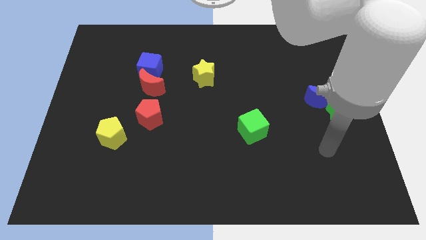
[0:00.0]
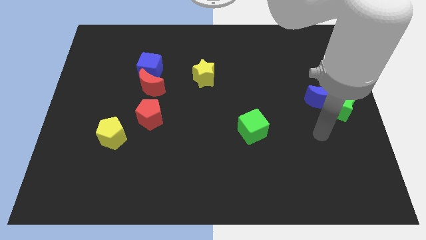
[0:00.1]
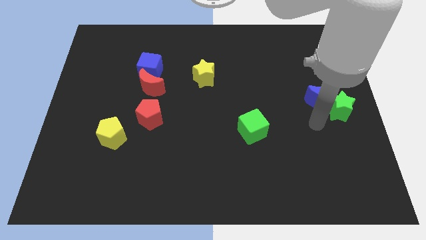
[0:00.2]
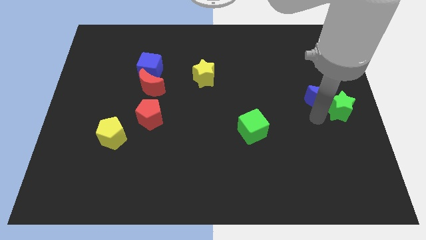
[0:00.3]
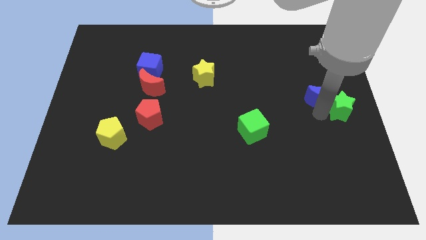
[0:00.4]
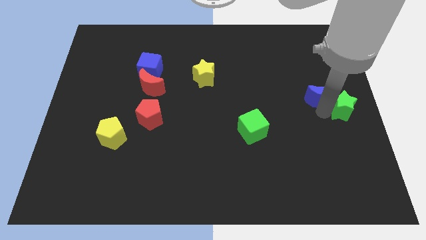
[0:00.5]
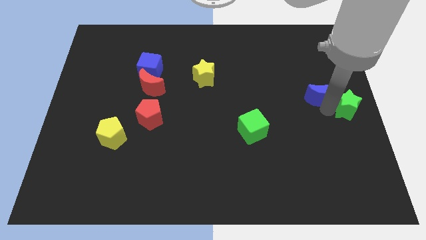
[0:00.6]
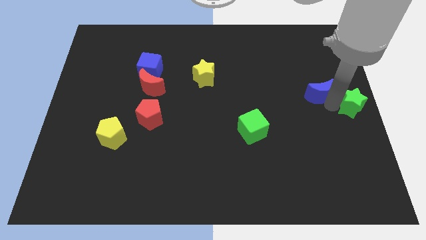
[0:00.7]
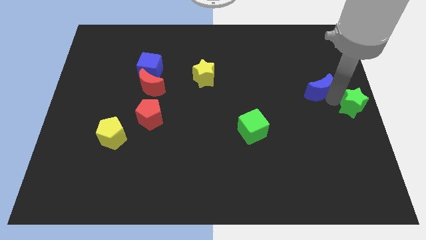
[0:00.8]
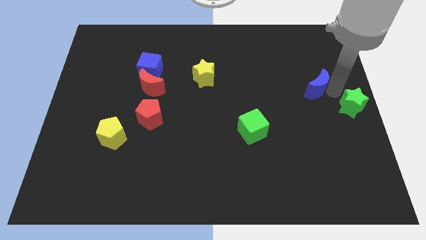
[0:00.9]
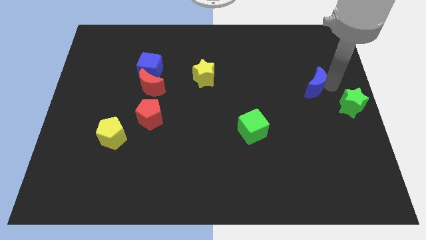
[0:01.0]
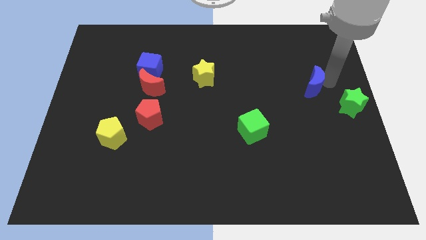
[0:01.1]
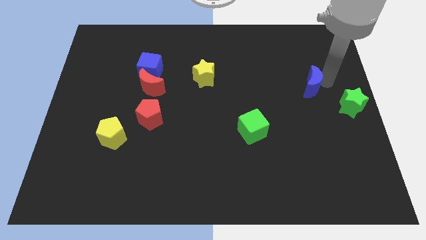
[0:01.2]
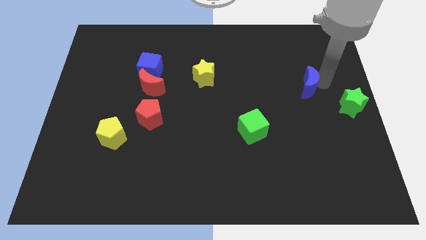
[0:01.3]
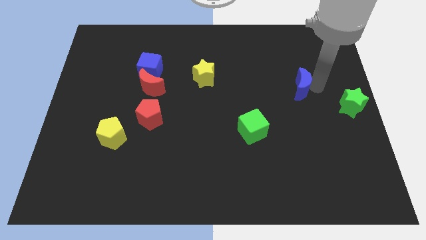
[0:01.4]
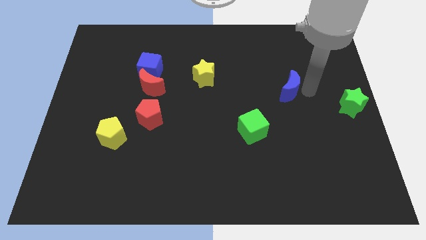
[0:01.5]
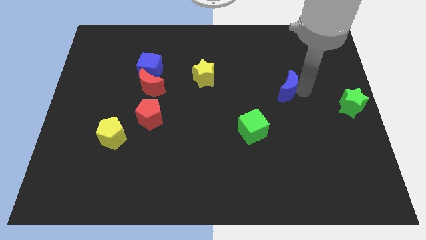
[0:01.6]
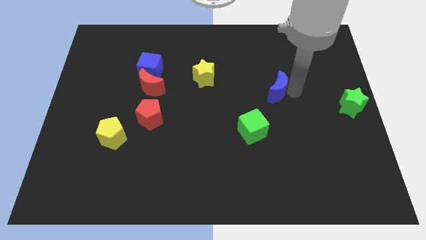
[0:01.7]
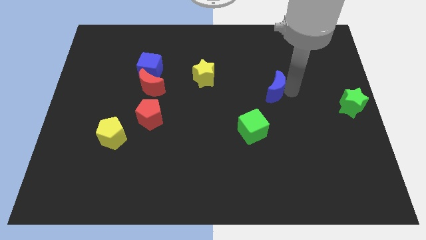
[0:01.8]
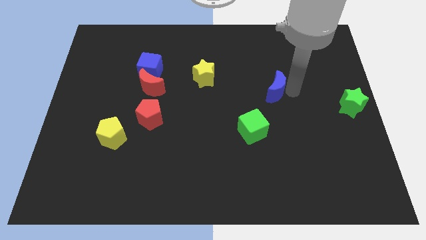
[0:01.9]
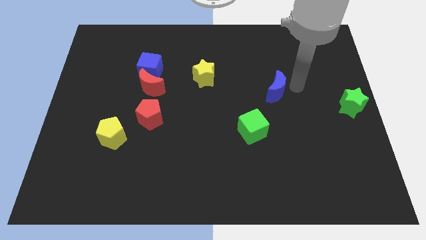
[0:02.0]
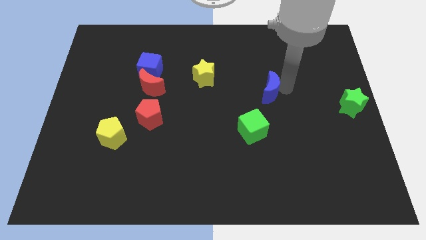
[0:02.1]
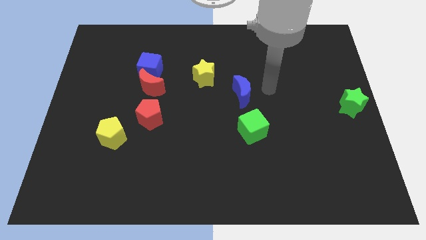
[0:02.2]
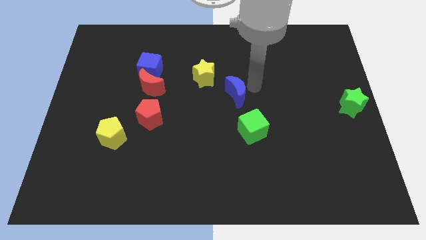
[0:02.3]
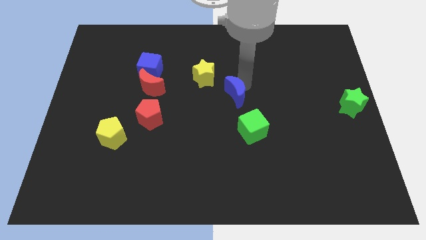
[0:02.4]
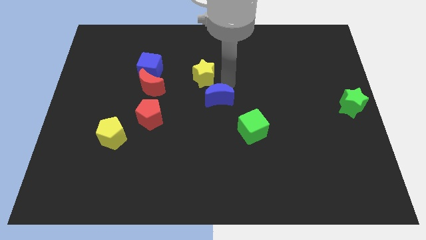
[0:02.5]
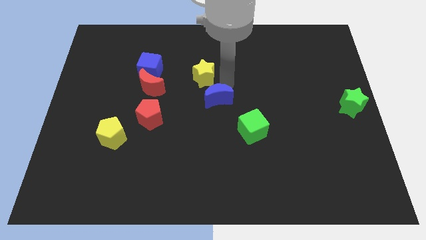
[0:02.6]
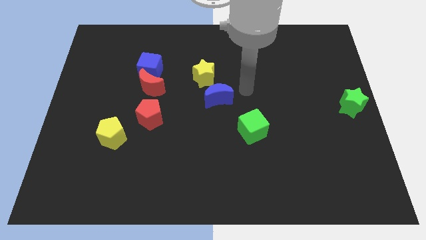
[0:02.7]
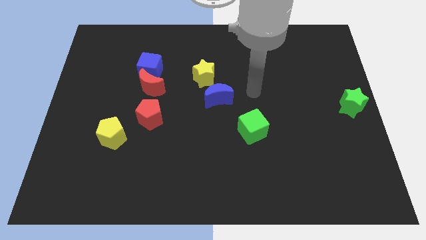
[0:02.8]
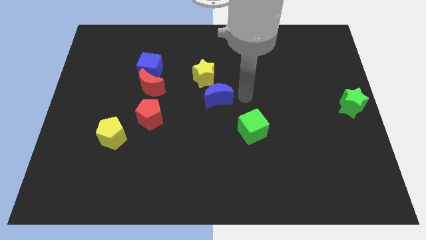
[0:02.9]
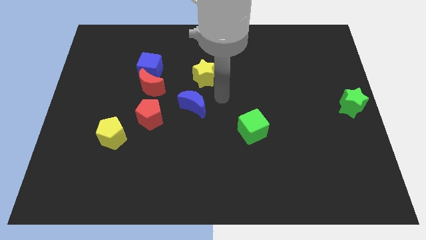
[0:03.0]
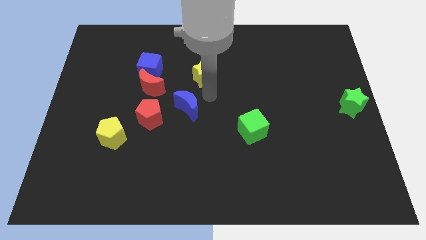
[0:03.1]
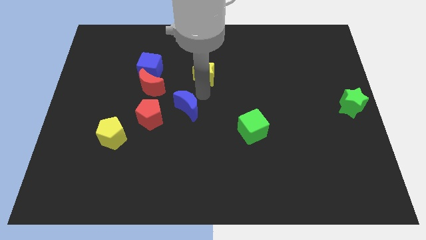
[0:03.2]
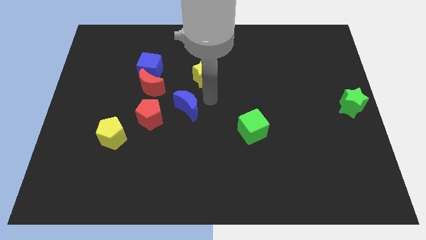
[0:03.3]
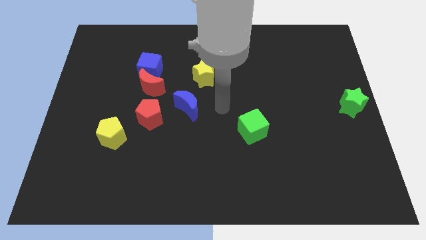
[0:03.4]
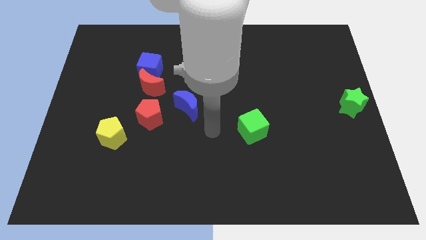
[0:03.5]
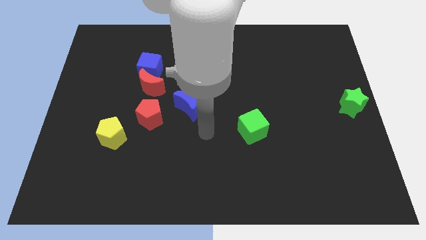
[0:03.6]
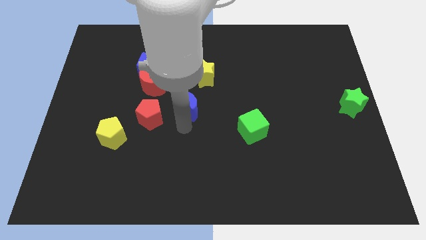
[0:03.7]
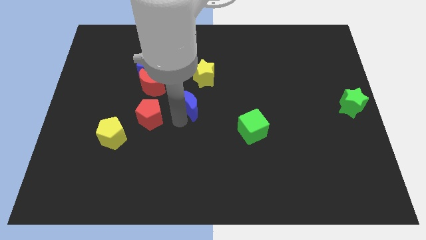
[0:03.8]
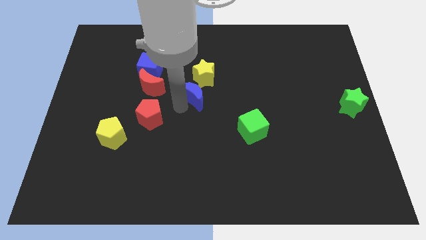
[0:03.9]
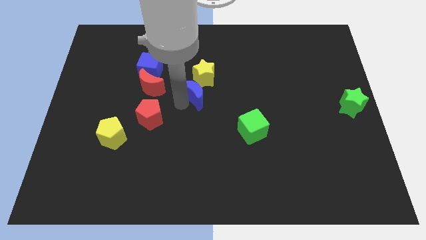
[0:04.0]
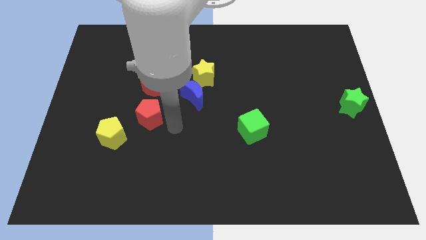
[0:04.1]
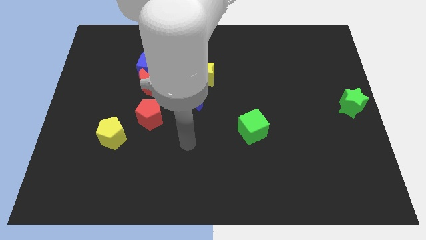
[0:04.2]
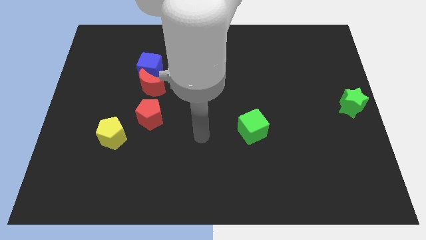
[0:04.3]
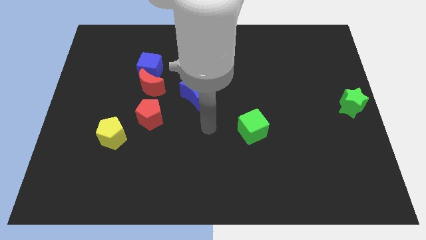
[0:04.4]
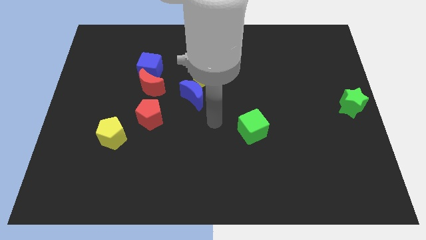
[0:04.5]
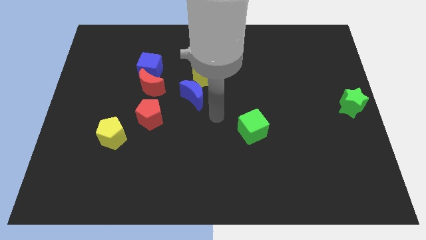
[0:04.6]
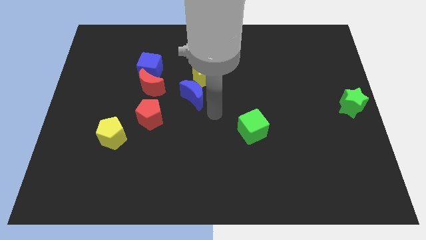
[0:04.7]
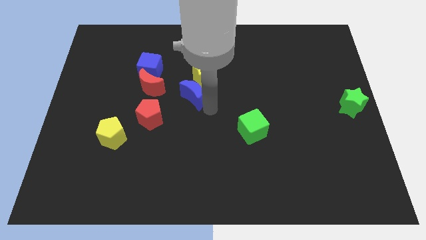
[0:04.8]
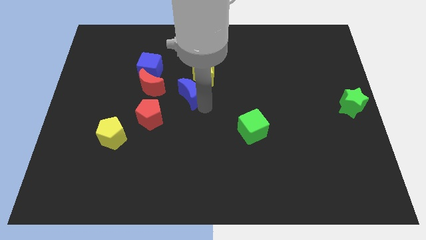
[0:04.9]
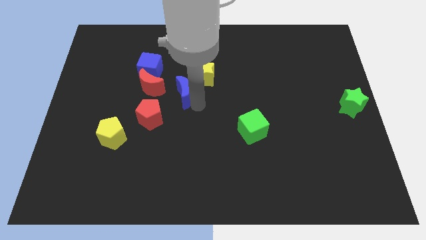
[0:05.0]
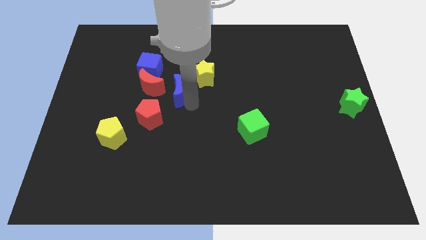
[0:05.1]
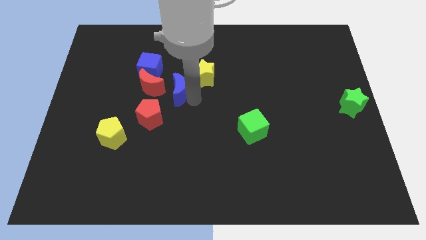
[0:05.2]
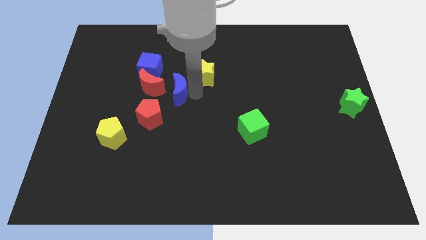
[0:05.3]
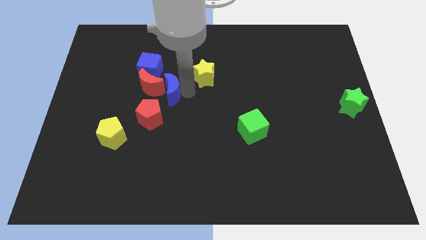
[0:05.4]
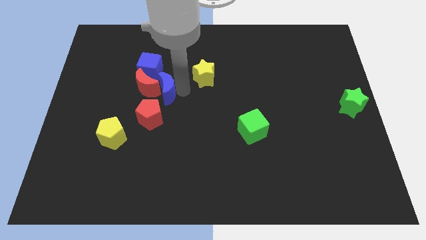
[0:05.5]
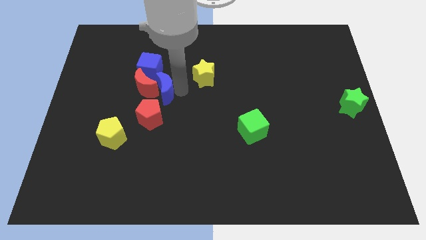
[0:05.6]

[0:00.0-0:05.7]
move the blue moon to the red moon

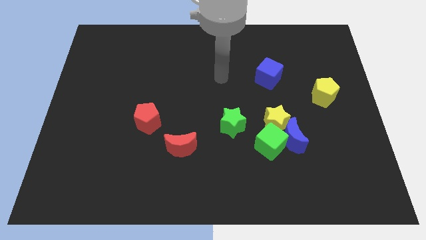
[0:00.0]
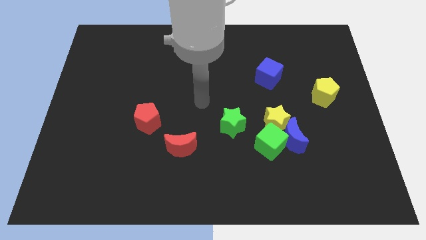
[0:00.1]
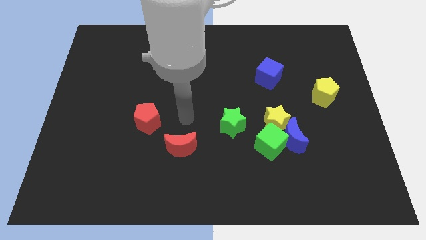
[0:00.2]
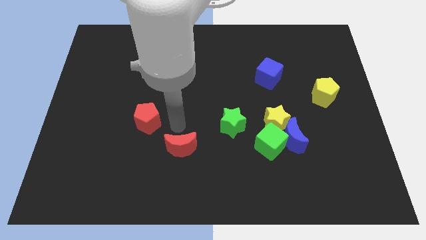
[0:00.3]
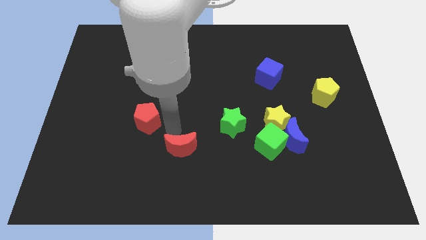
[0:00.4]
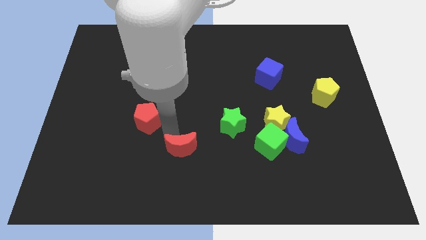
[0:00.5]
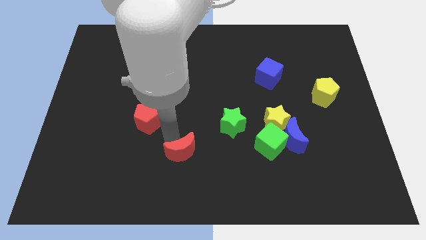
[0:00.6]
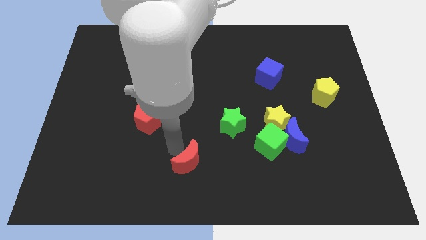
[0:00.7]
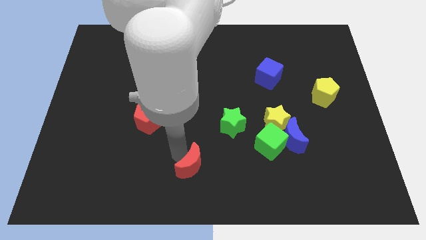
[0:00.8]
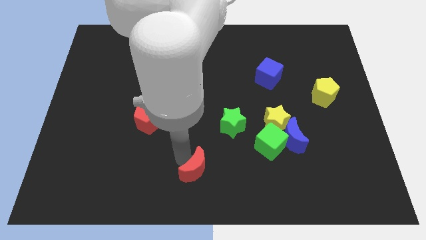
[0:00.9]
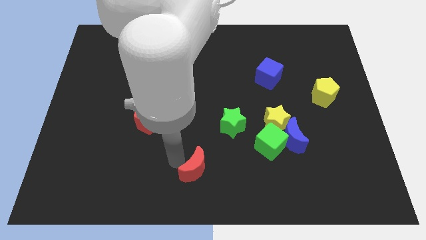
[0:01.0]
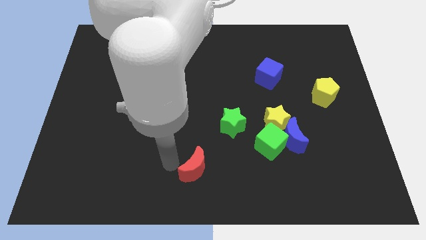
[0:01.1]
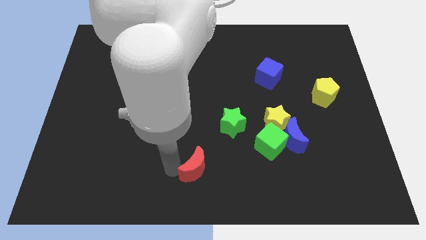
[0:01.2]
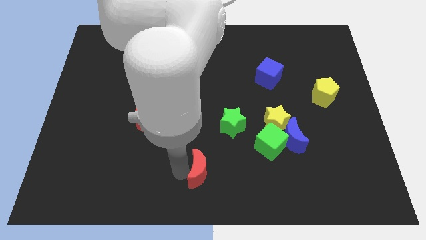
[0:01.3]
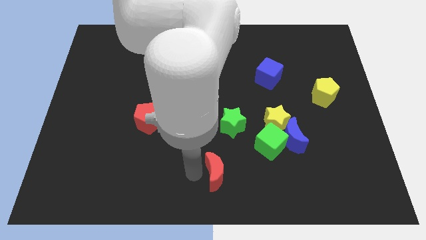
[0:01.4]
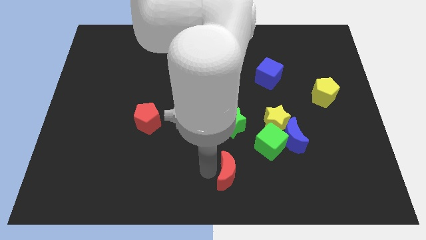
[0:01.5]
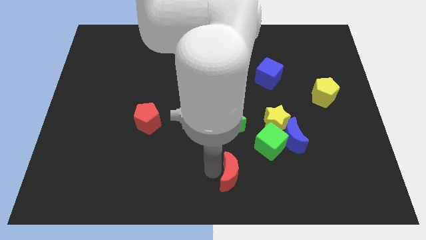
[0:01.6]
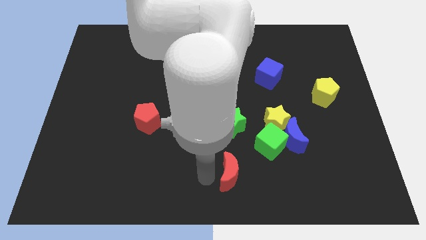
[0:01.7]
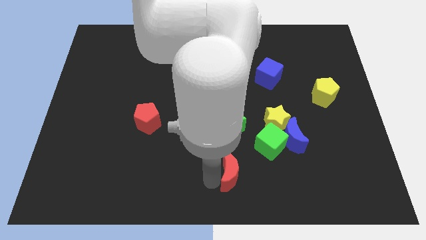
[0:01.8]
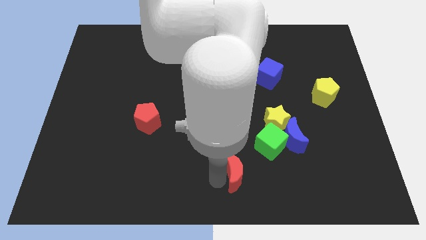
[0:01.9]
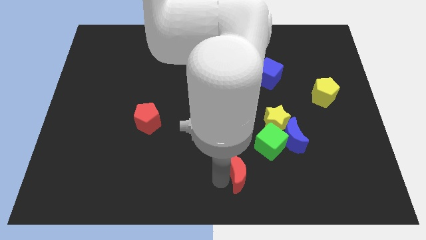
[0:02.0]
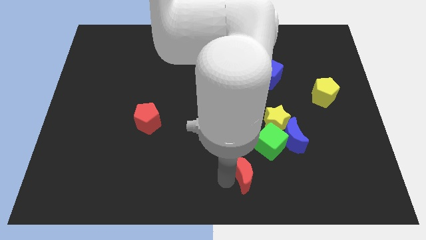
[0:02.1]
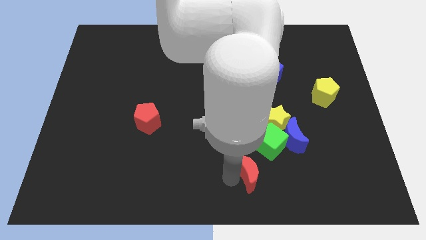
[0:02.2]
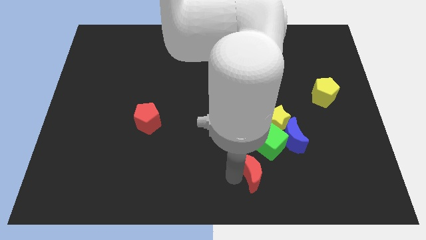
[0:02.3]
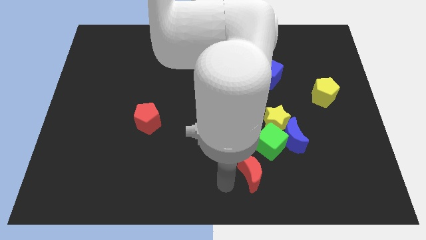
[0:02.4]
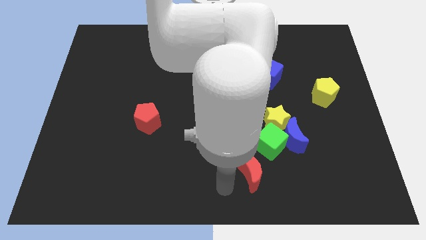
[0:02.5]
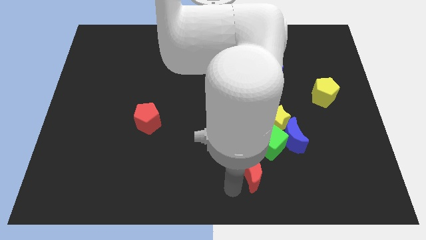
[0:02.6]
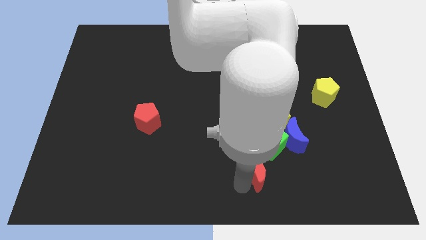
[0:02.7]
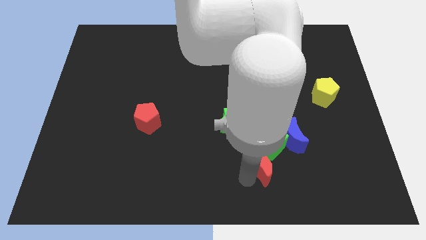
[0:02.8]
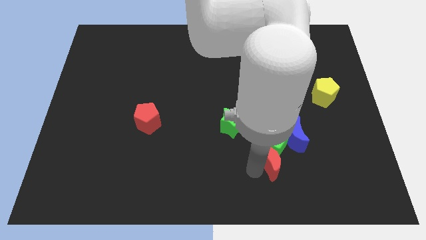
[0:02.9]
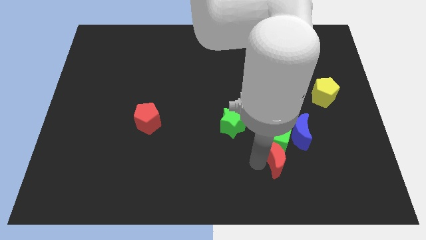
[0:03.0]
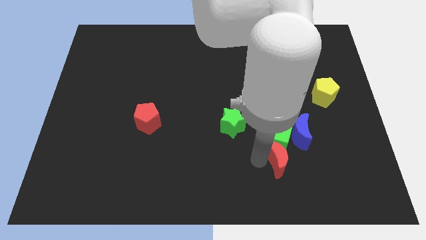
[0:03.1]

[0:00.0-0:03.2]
push the red moon to the green cube
